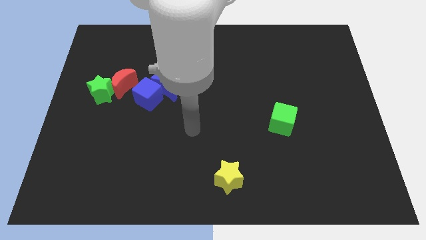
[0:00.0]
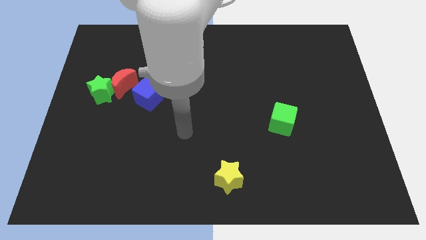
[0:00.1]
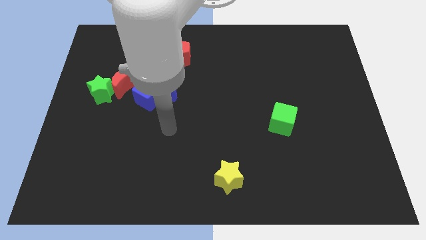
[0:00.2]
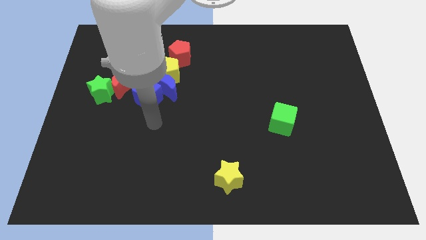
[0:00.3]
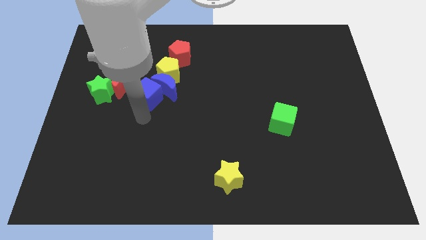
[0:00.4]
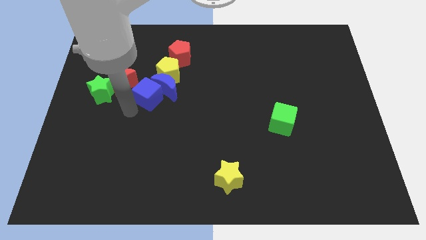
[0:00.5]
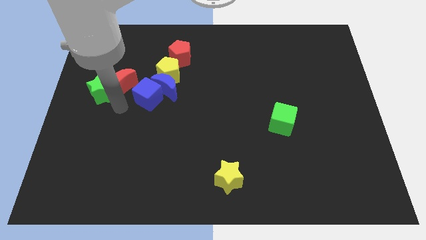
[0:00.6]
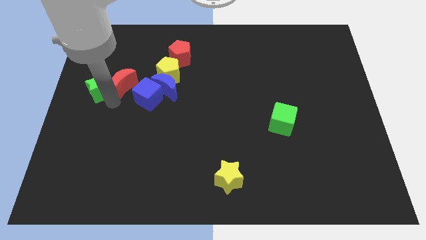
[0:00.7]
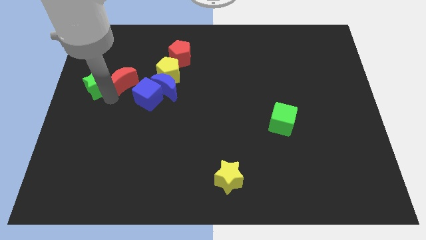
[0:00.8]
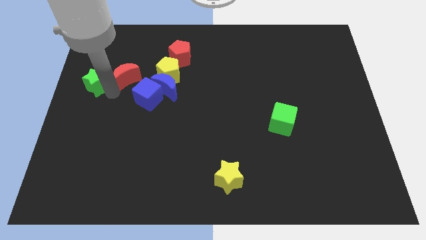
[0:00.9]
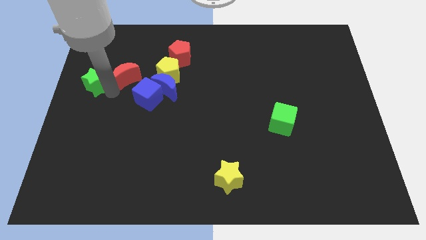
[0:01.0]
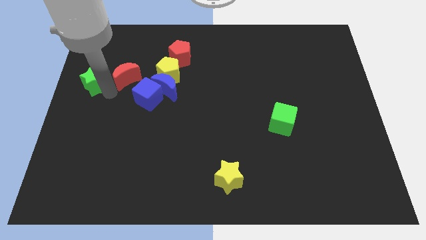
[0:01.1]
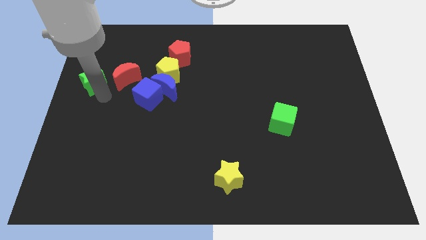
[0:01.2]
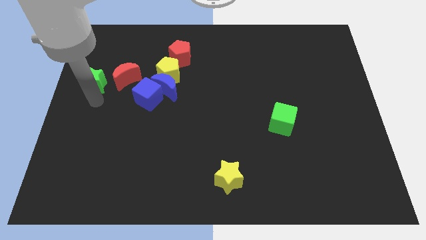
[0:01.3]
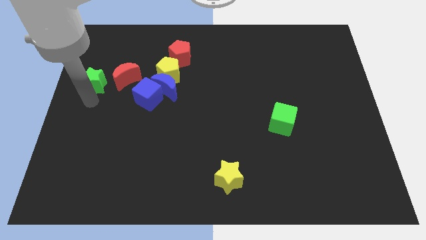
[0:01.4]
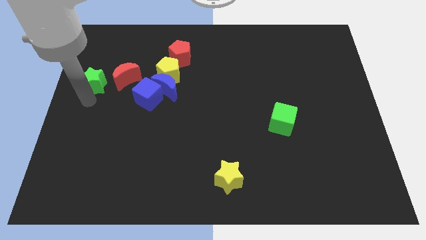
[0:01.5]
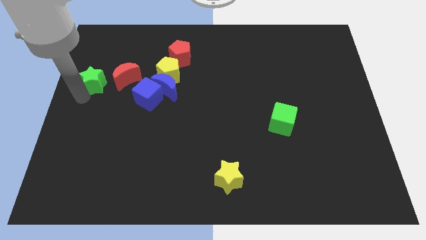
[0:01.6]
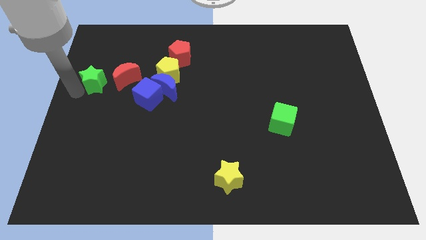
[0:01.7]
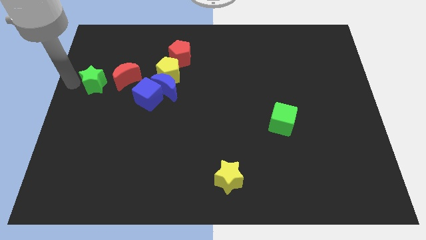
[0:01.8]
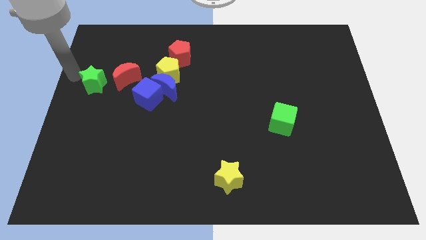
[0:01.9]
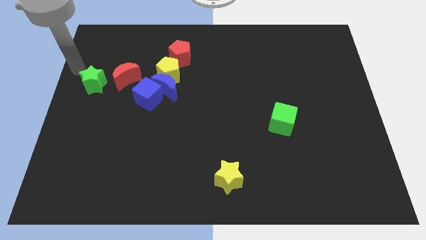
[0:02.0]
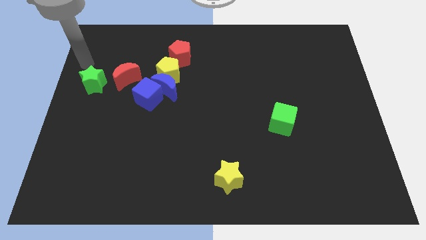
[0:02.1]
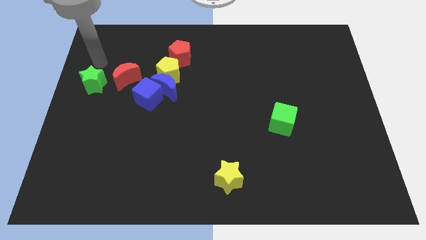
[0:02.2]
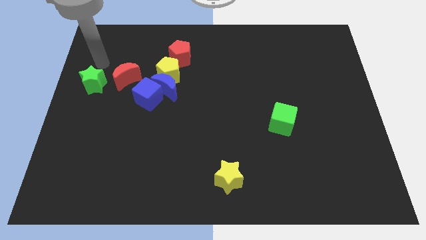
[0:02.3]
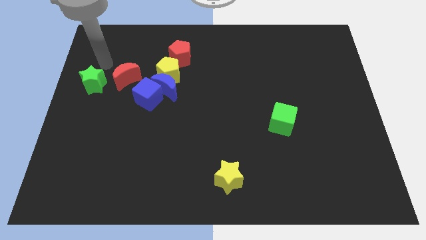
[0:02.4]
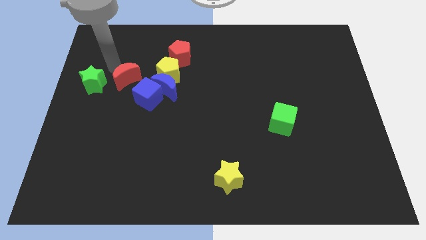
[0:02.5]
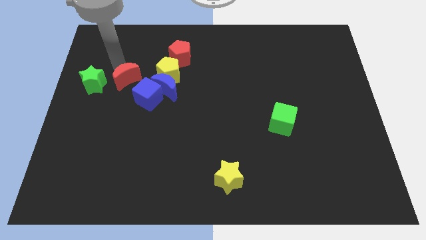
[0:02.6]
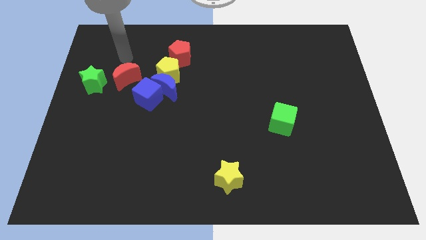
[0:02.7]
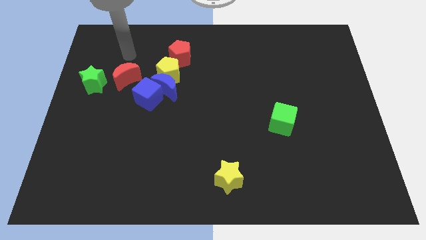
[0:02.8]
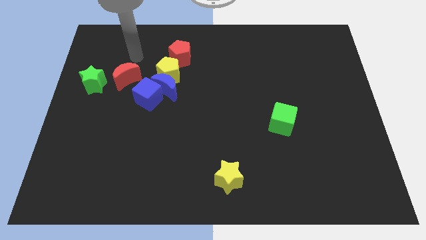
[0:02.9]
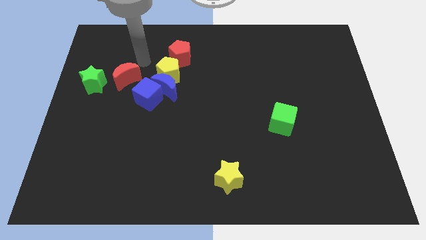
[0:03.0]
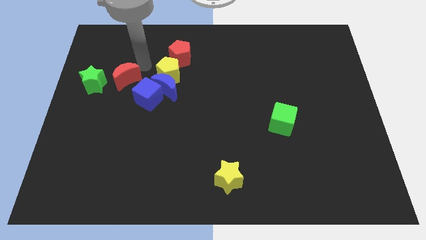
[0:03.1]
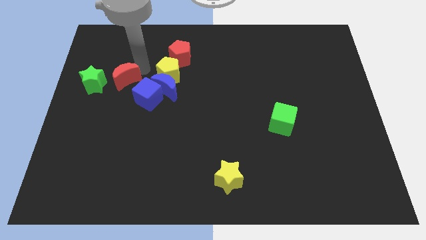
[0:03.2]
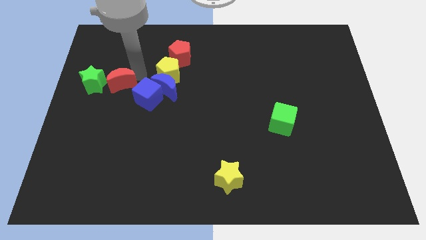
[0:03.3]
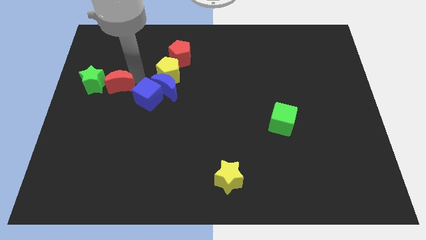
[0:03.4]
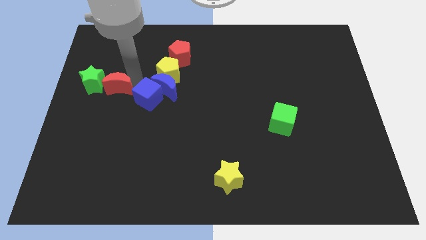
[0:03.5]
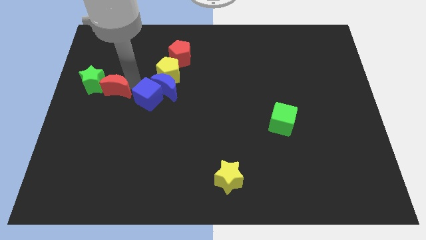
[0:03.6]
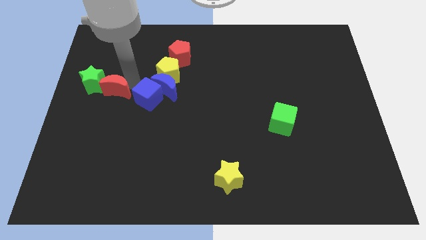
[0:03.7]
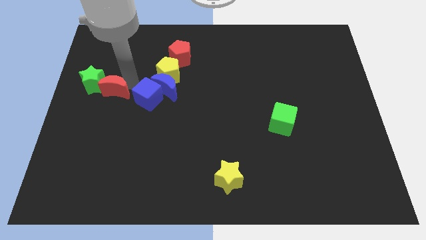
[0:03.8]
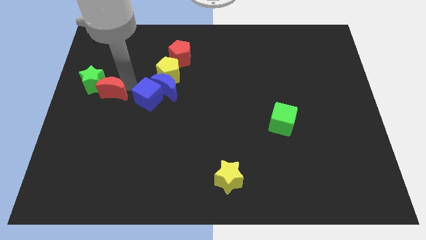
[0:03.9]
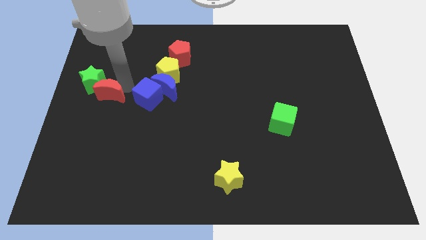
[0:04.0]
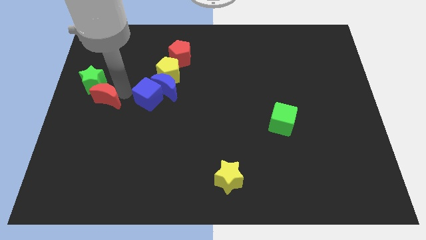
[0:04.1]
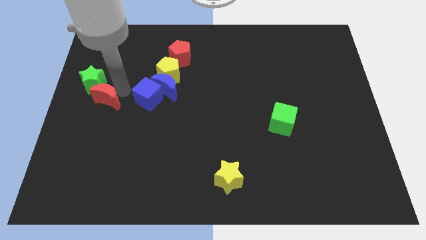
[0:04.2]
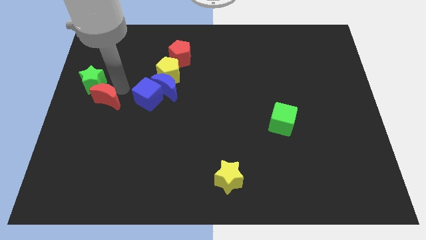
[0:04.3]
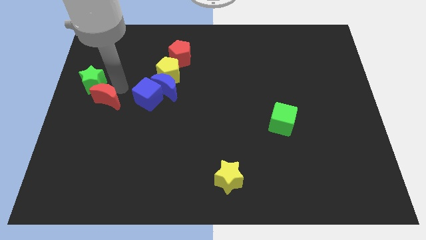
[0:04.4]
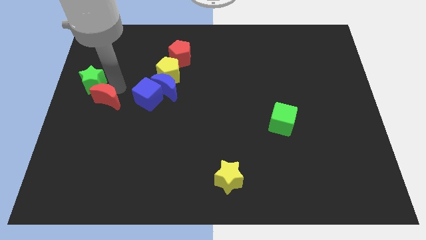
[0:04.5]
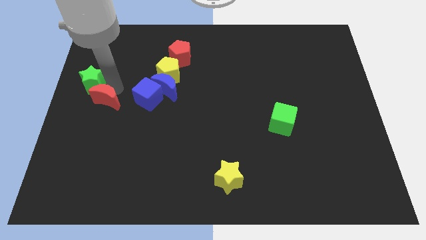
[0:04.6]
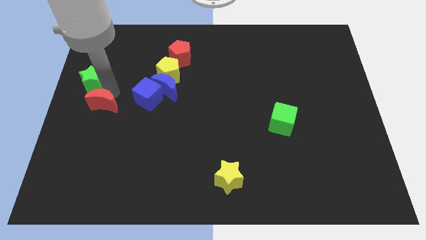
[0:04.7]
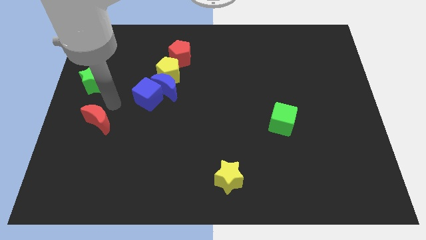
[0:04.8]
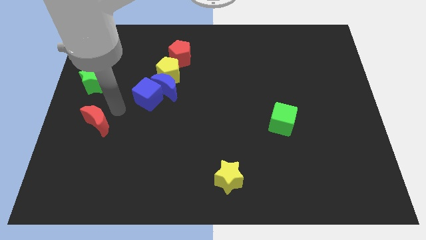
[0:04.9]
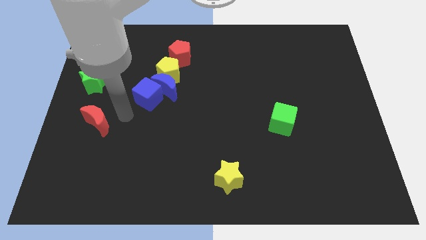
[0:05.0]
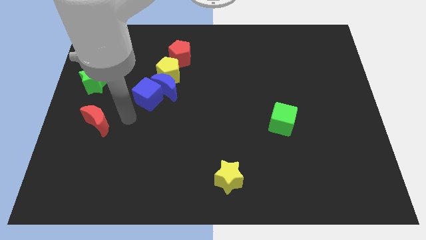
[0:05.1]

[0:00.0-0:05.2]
move the red moon to the bottom side of the green star

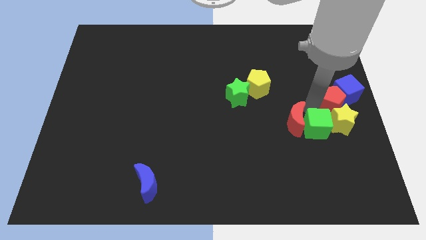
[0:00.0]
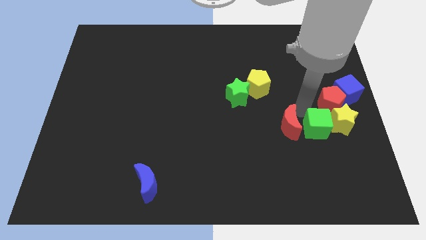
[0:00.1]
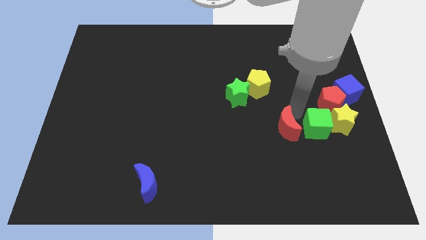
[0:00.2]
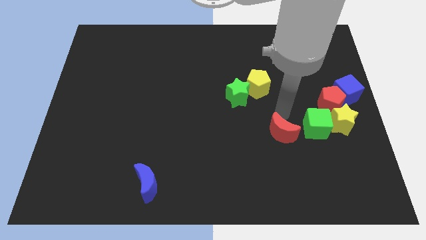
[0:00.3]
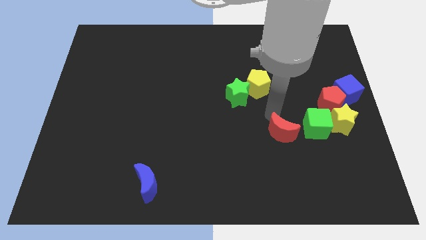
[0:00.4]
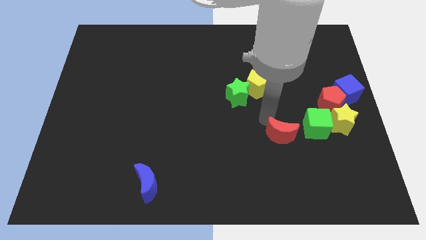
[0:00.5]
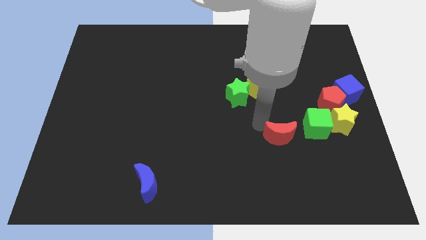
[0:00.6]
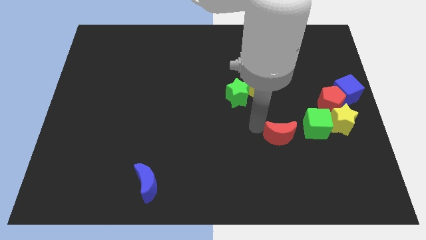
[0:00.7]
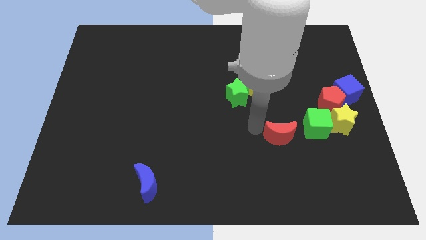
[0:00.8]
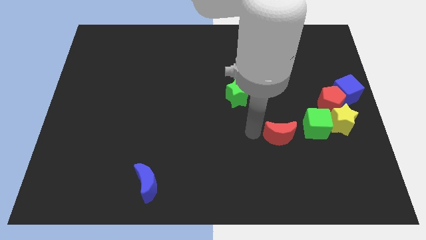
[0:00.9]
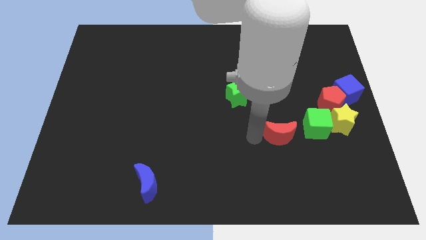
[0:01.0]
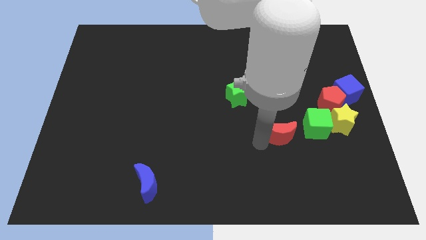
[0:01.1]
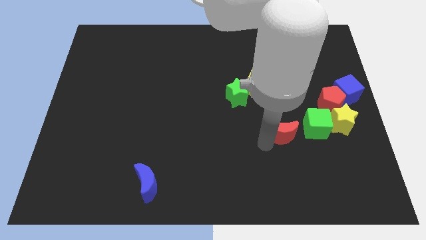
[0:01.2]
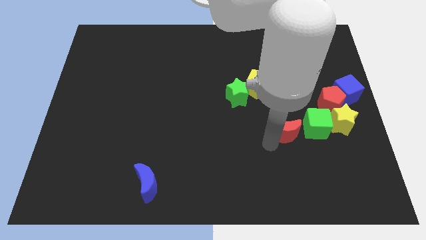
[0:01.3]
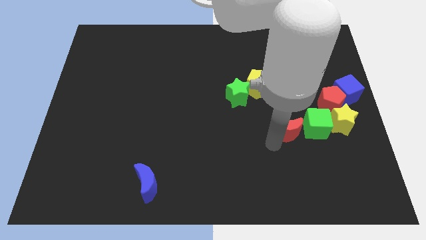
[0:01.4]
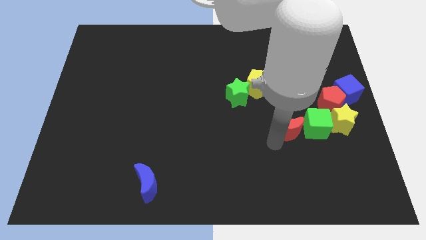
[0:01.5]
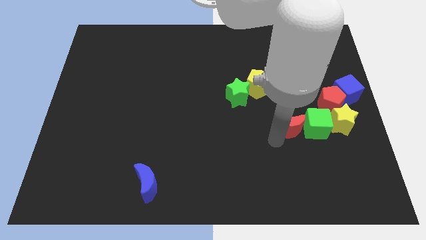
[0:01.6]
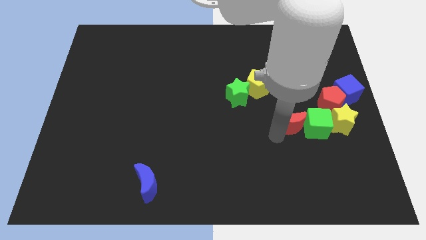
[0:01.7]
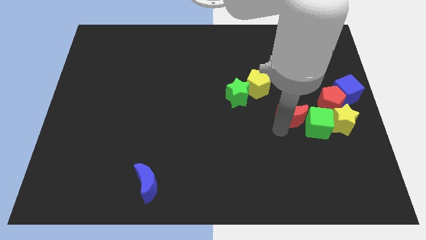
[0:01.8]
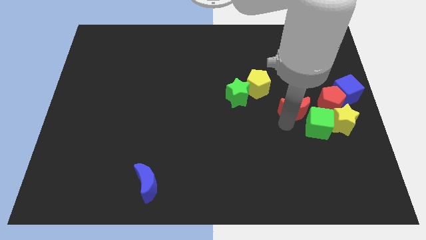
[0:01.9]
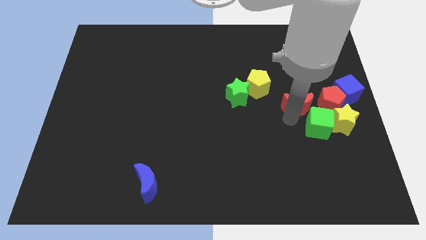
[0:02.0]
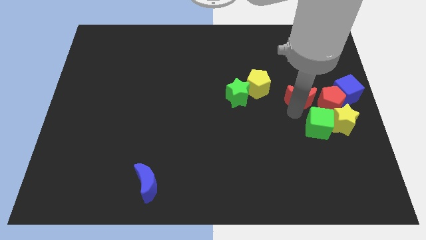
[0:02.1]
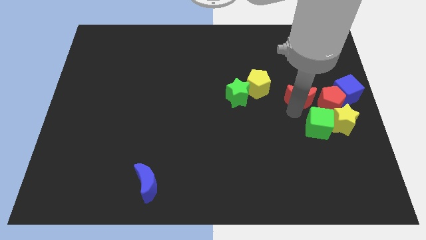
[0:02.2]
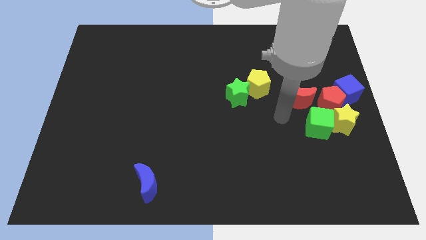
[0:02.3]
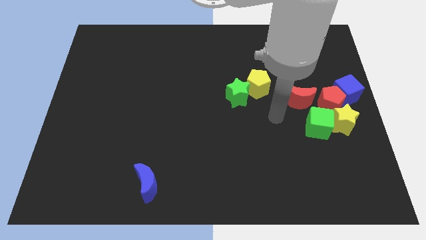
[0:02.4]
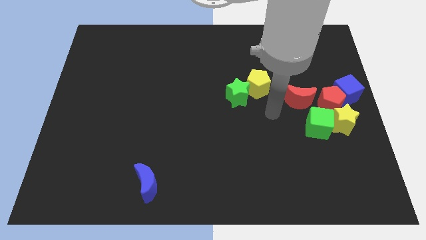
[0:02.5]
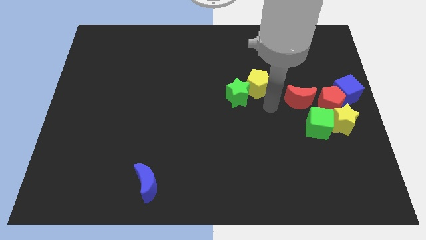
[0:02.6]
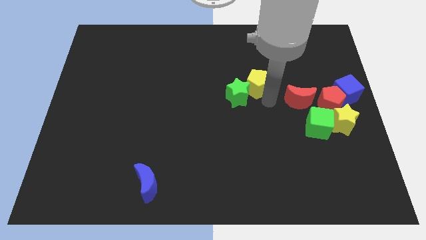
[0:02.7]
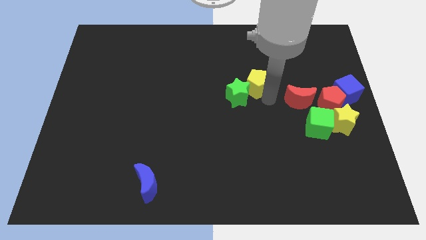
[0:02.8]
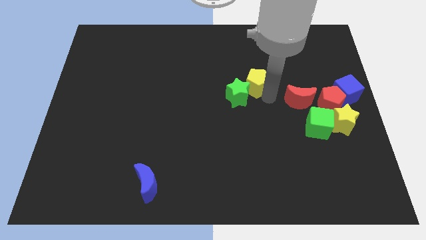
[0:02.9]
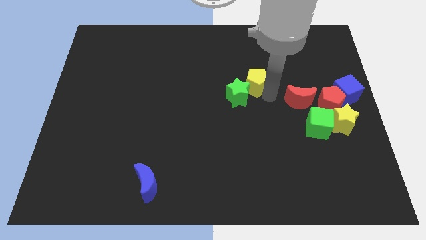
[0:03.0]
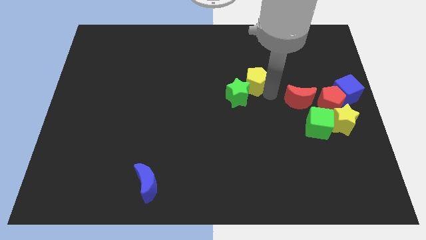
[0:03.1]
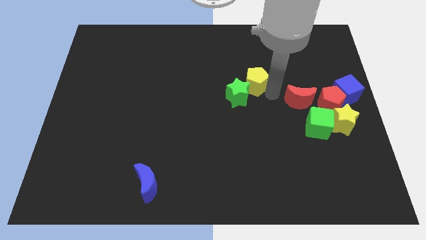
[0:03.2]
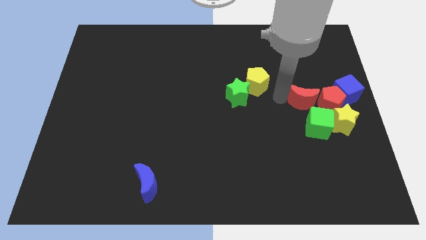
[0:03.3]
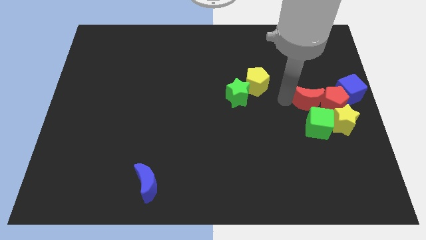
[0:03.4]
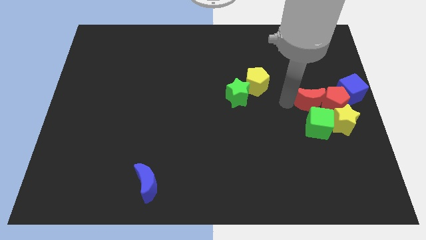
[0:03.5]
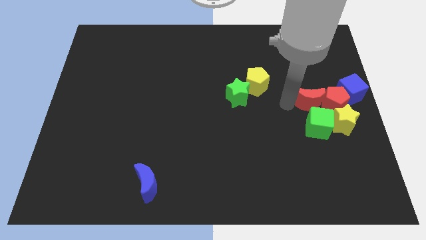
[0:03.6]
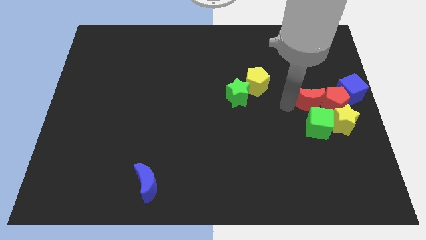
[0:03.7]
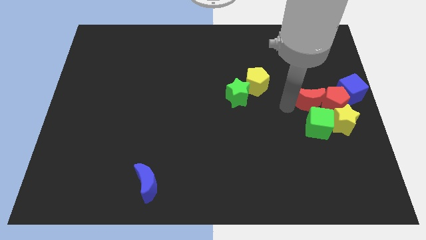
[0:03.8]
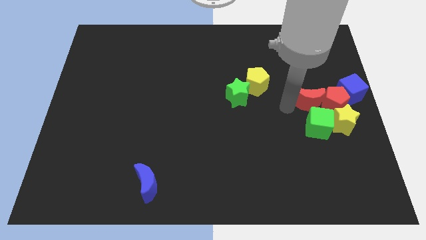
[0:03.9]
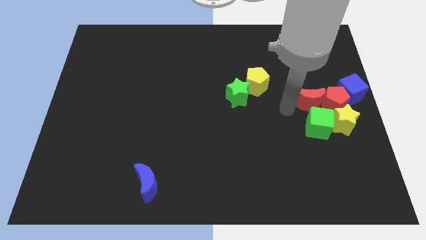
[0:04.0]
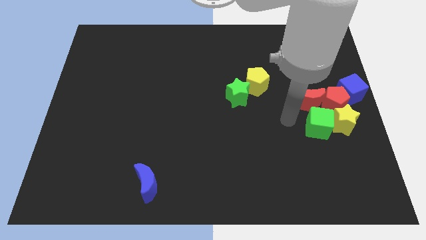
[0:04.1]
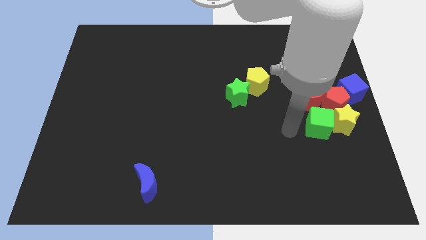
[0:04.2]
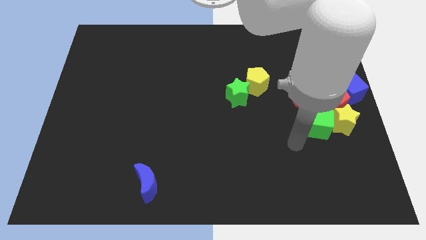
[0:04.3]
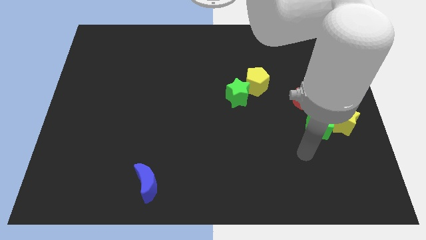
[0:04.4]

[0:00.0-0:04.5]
push the red crescent to the left of the red pentagon
